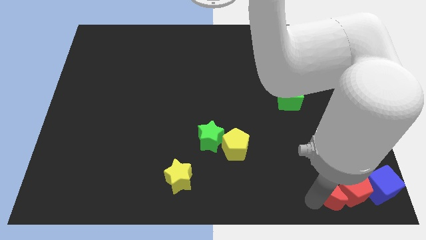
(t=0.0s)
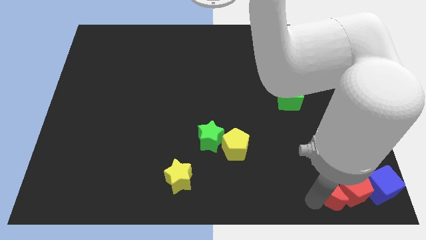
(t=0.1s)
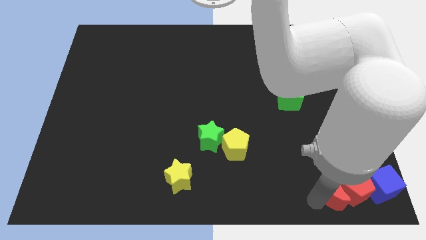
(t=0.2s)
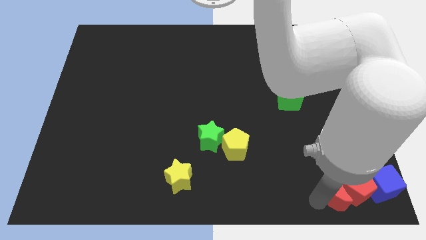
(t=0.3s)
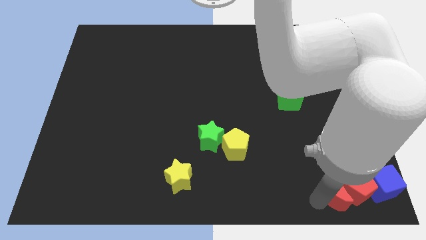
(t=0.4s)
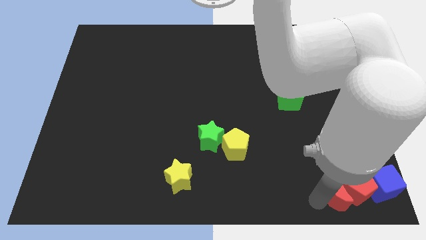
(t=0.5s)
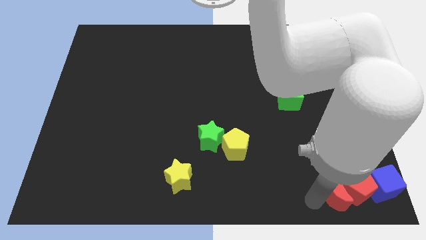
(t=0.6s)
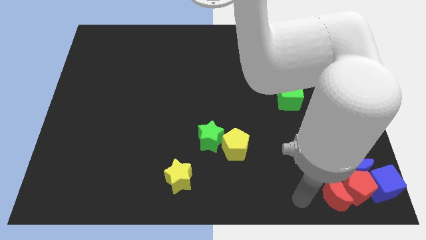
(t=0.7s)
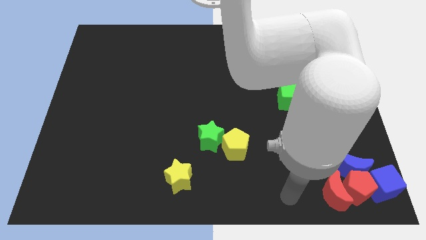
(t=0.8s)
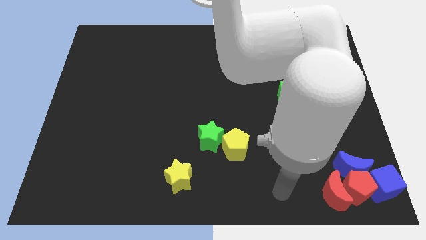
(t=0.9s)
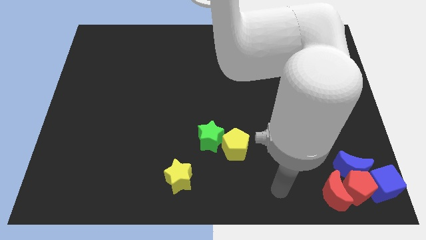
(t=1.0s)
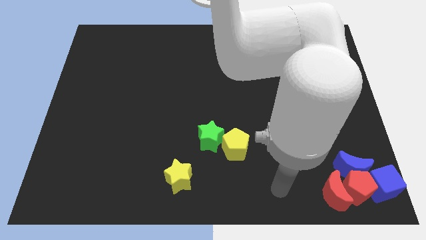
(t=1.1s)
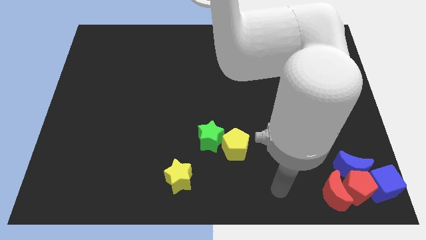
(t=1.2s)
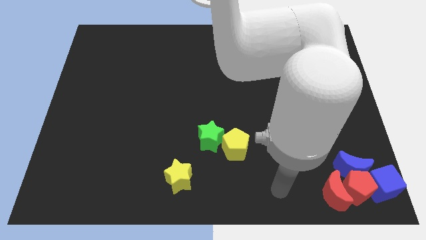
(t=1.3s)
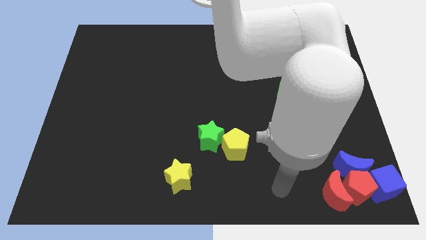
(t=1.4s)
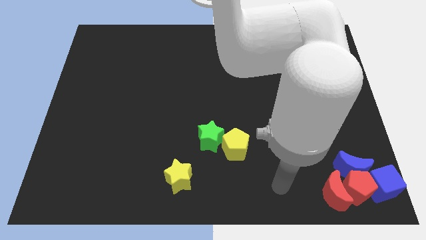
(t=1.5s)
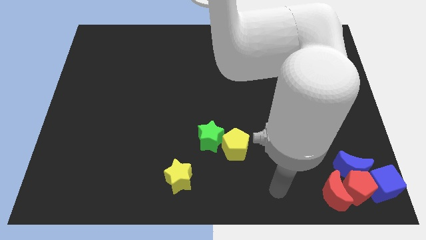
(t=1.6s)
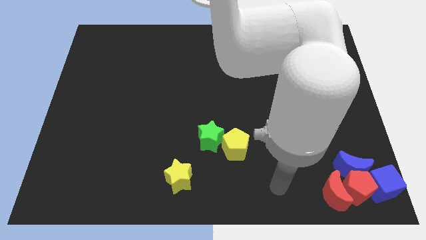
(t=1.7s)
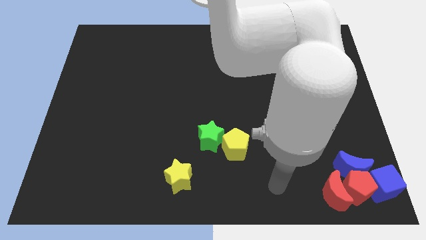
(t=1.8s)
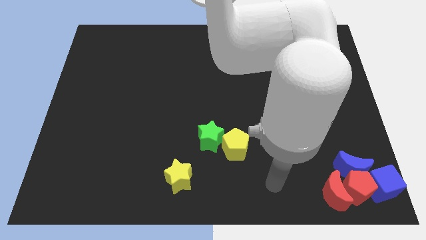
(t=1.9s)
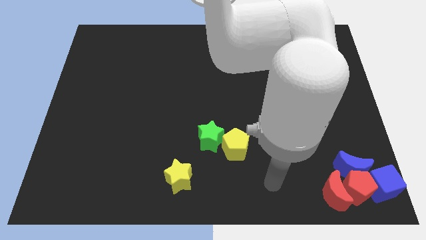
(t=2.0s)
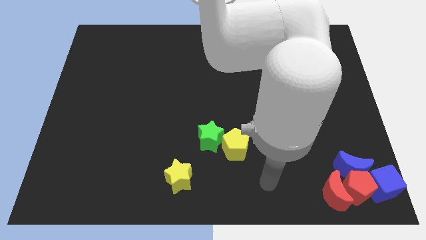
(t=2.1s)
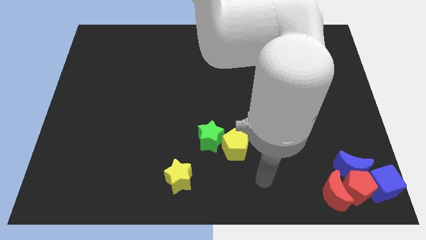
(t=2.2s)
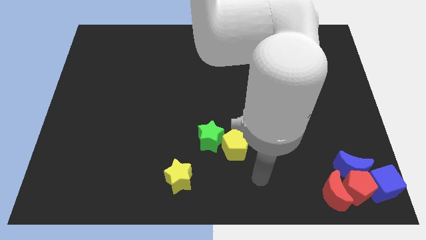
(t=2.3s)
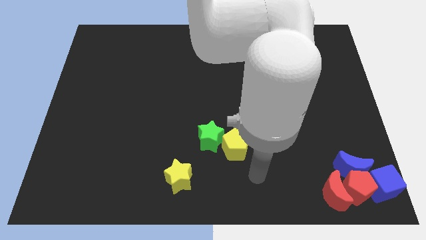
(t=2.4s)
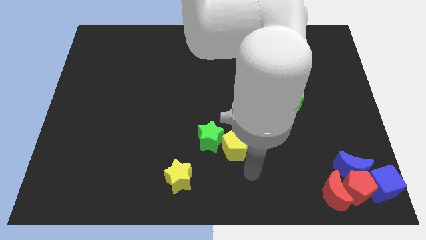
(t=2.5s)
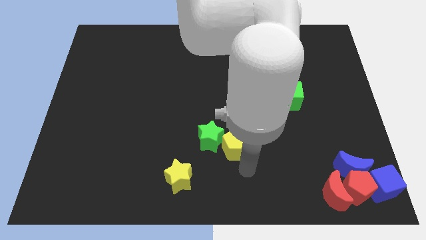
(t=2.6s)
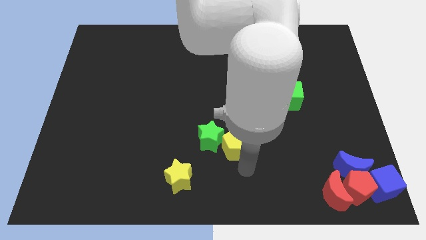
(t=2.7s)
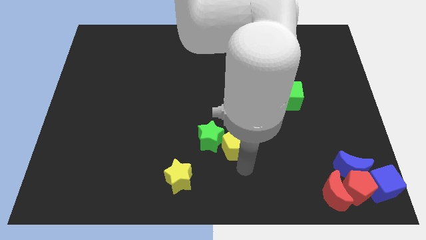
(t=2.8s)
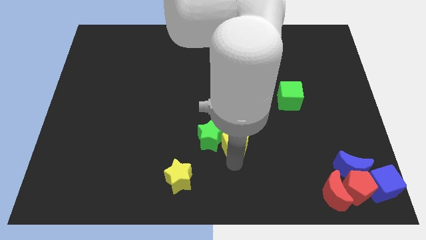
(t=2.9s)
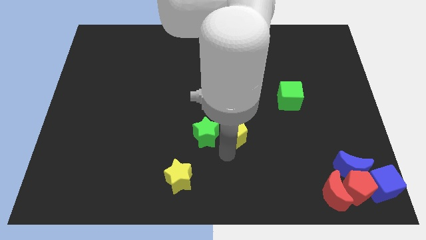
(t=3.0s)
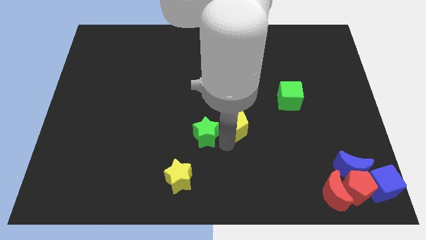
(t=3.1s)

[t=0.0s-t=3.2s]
point your arm near yellow pentagon

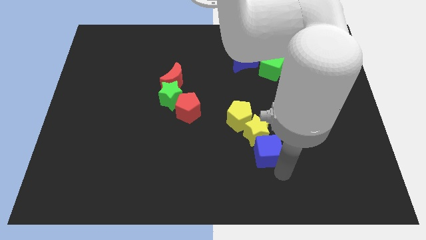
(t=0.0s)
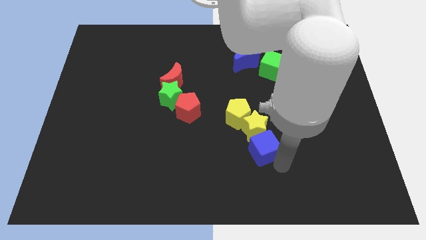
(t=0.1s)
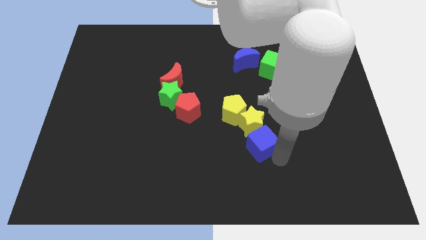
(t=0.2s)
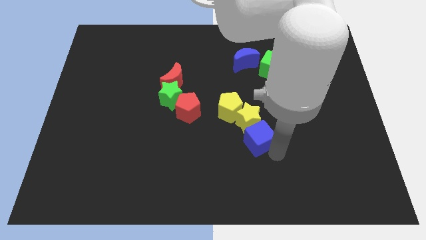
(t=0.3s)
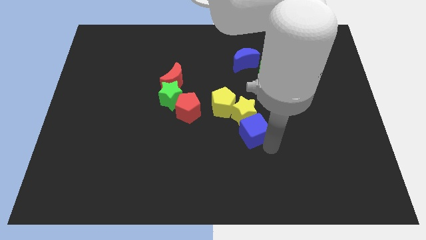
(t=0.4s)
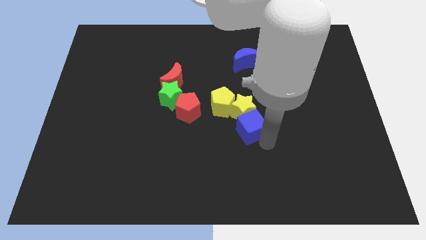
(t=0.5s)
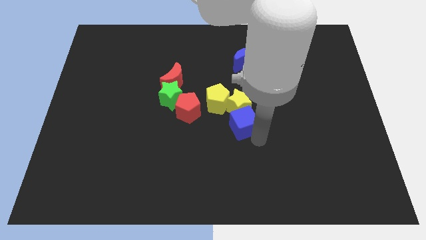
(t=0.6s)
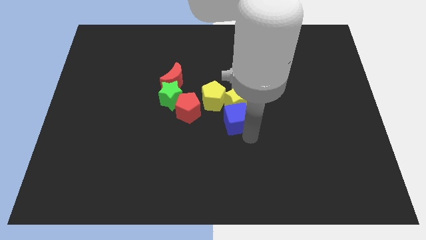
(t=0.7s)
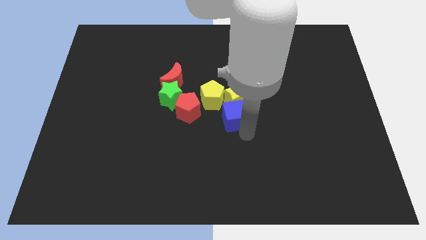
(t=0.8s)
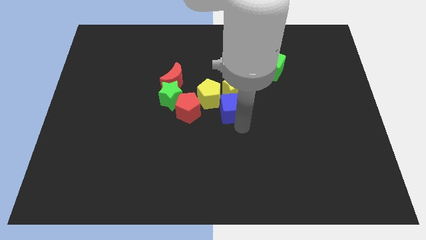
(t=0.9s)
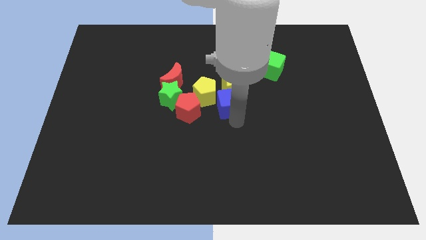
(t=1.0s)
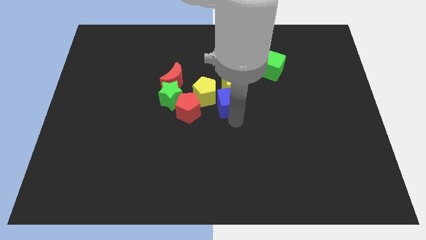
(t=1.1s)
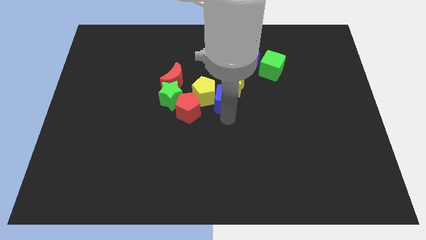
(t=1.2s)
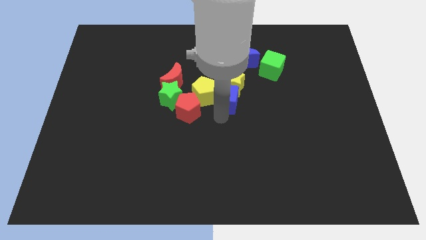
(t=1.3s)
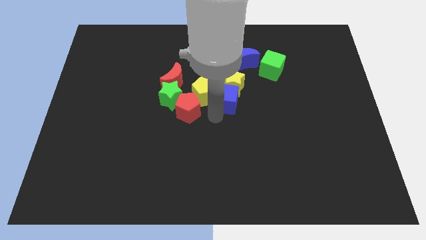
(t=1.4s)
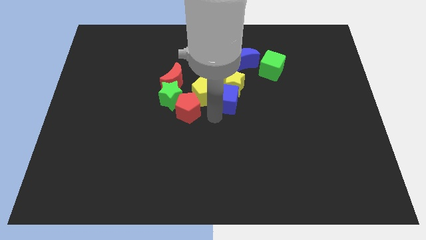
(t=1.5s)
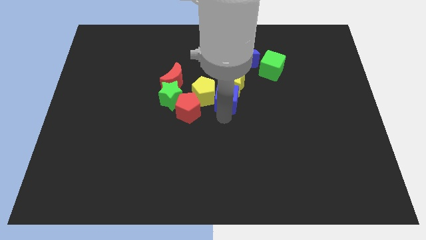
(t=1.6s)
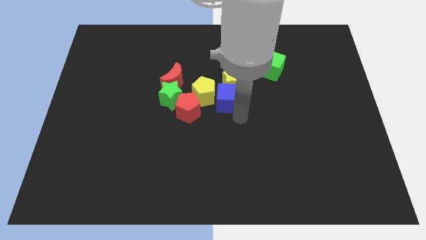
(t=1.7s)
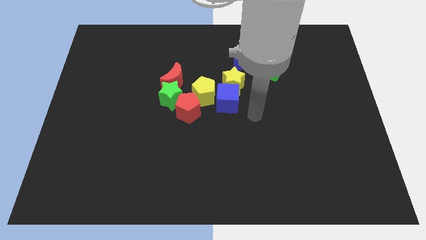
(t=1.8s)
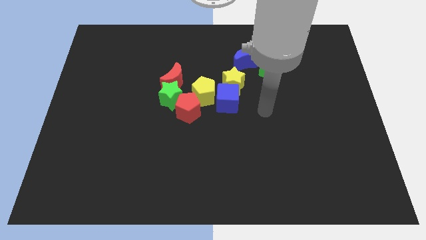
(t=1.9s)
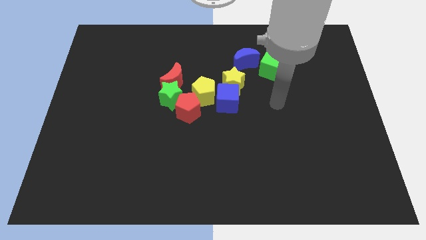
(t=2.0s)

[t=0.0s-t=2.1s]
move blue cube to the center

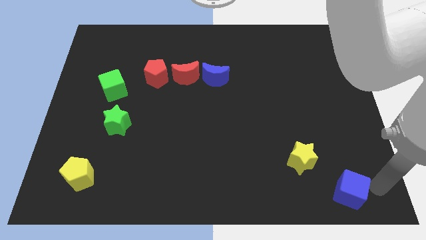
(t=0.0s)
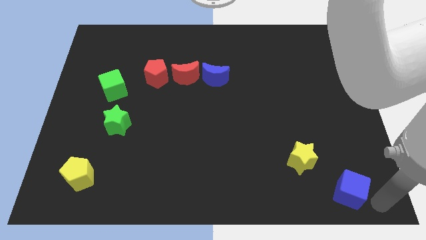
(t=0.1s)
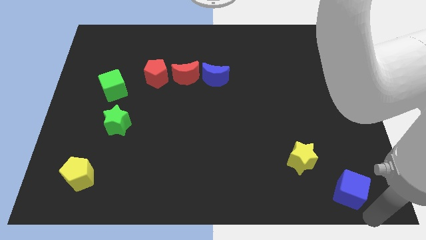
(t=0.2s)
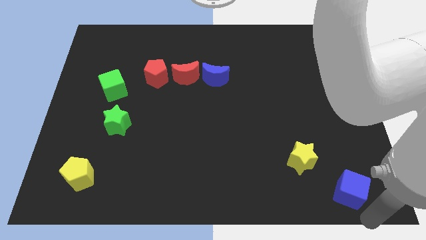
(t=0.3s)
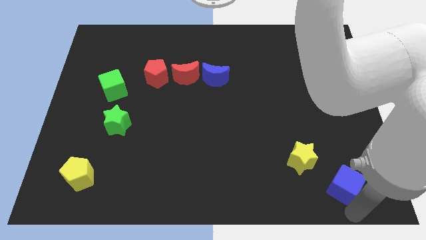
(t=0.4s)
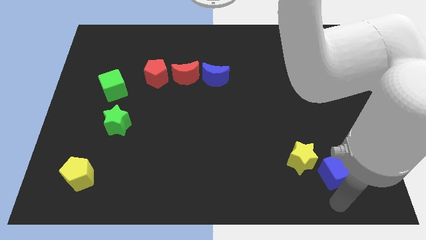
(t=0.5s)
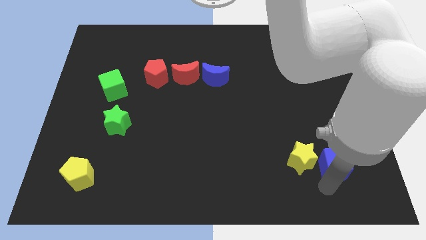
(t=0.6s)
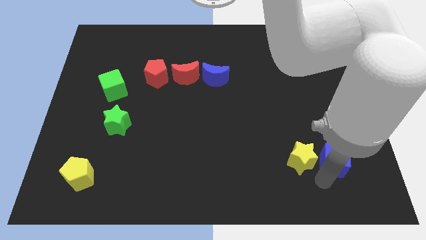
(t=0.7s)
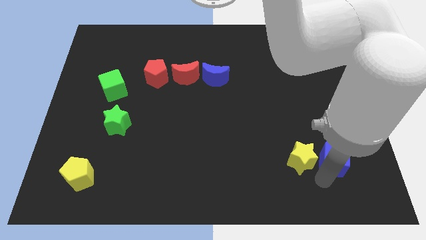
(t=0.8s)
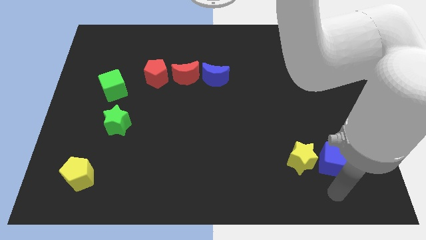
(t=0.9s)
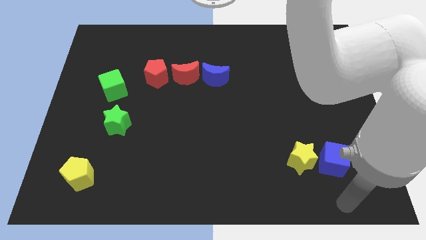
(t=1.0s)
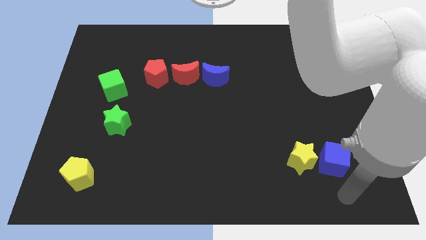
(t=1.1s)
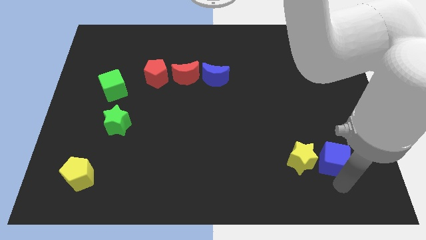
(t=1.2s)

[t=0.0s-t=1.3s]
place blue cube to the right of the yellow star

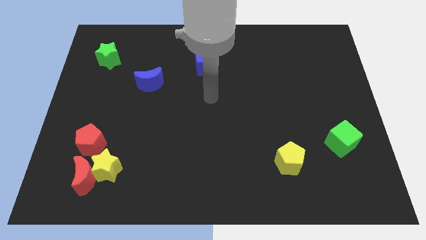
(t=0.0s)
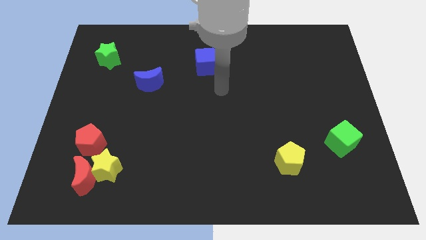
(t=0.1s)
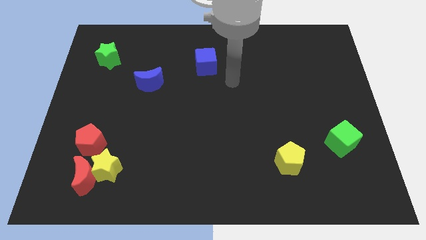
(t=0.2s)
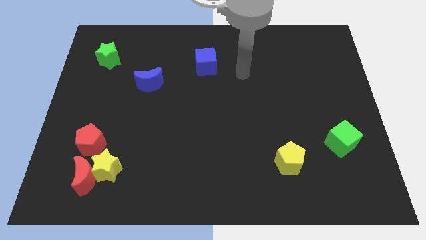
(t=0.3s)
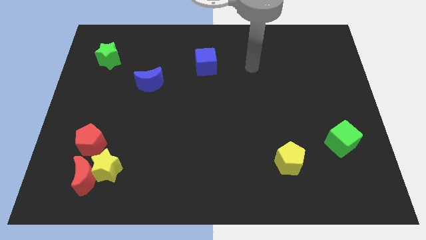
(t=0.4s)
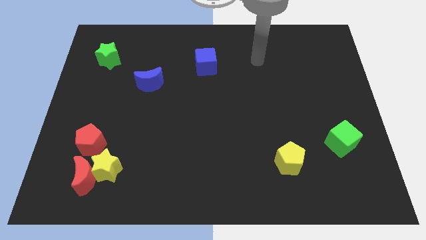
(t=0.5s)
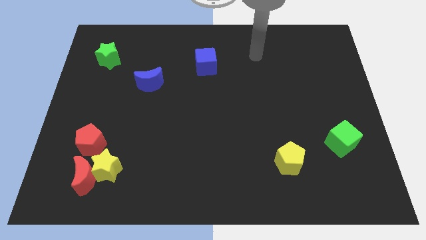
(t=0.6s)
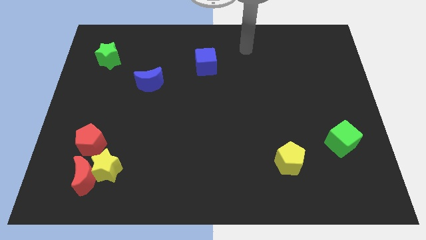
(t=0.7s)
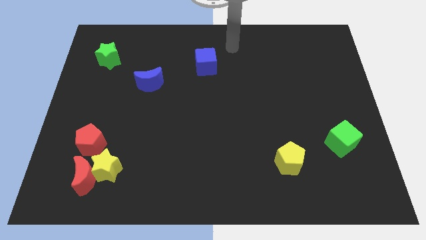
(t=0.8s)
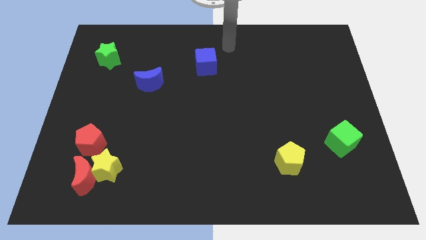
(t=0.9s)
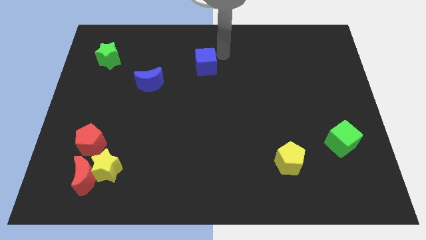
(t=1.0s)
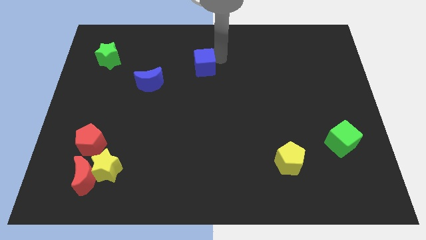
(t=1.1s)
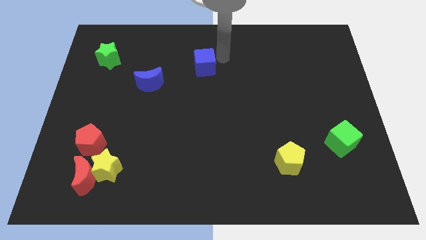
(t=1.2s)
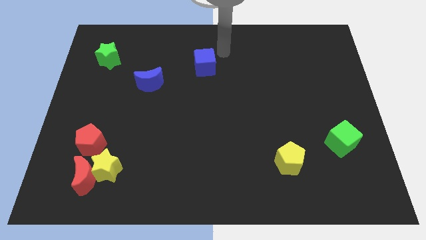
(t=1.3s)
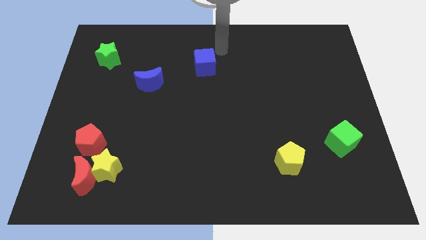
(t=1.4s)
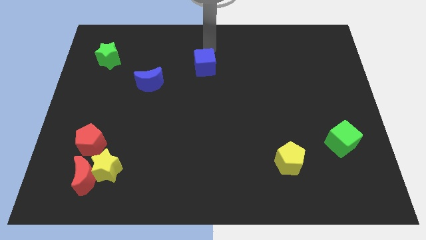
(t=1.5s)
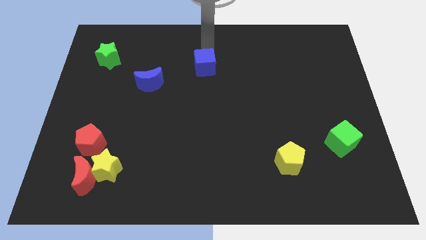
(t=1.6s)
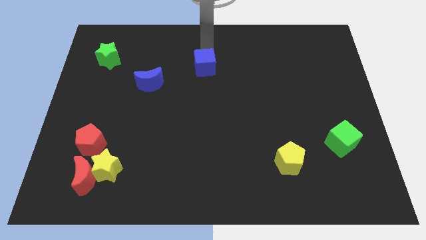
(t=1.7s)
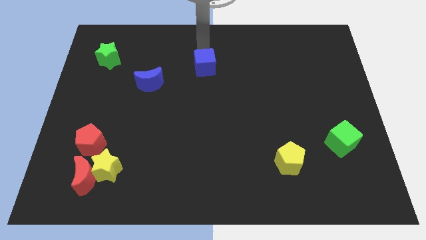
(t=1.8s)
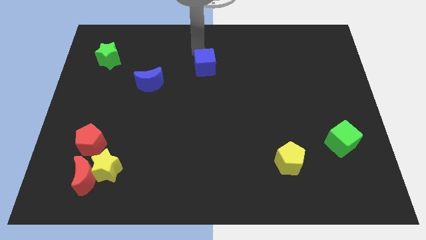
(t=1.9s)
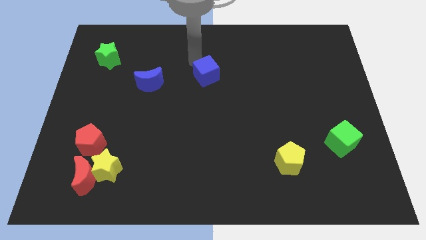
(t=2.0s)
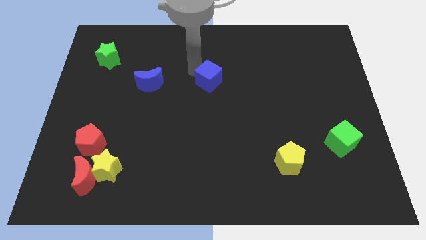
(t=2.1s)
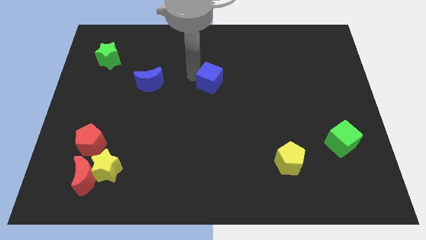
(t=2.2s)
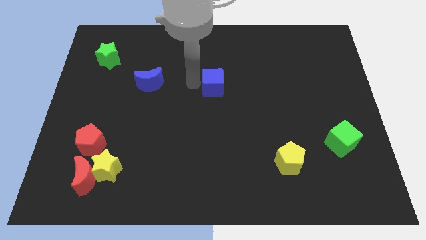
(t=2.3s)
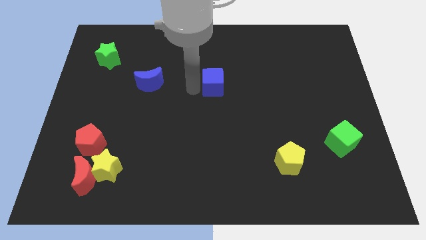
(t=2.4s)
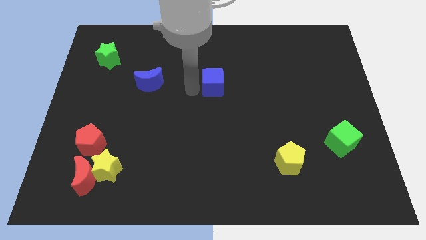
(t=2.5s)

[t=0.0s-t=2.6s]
push the blue cube to the right of the blue crescent
